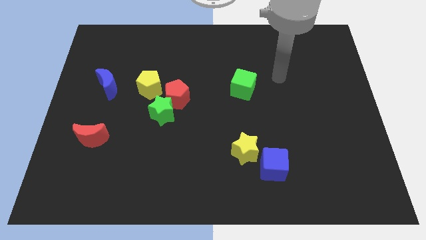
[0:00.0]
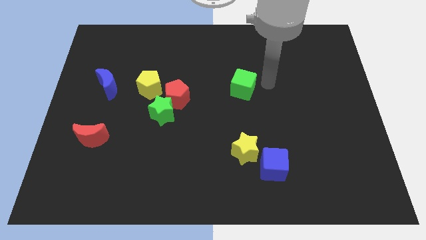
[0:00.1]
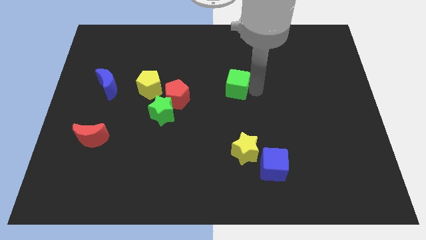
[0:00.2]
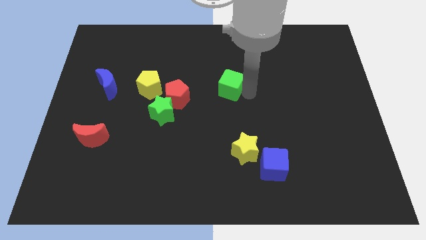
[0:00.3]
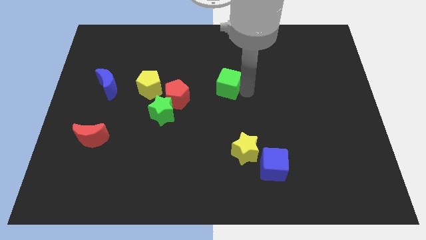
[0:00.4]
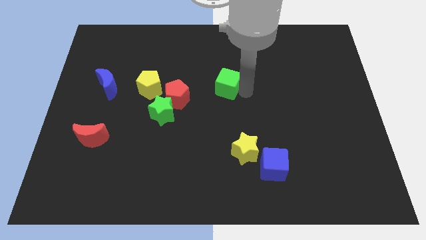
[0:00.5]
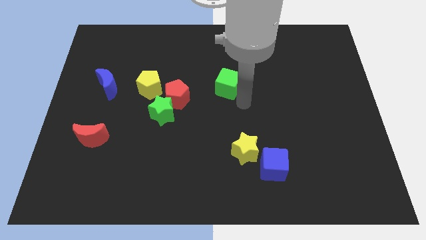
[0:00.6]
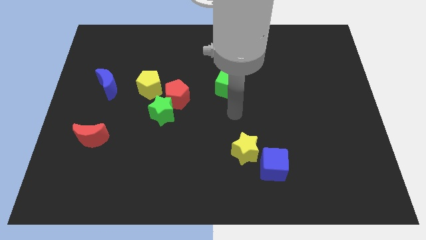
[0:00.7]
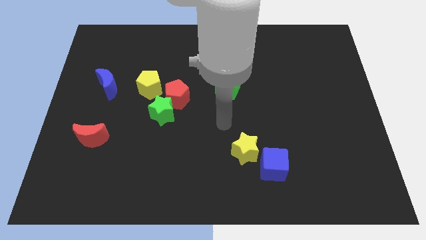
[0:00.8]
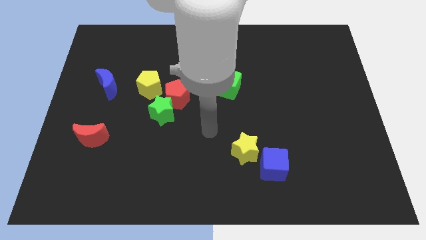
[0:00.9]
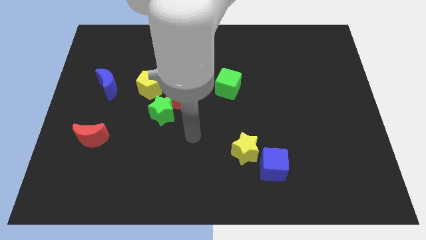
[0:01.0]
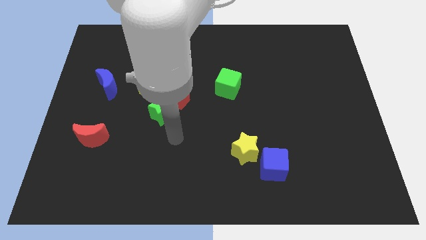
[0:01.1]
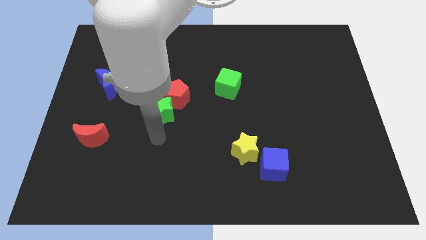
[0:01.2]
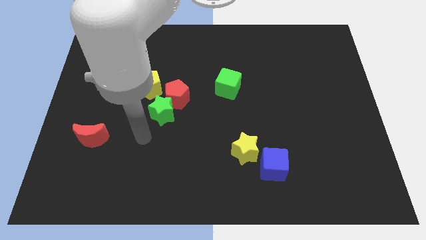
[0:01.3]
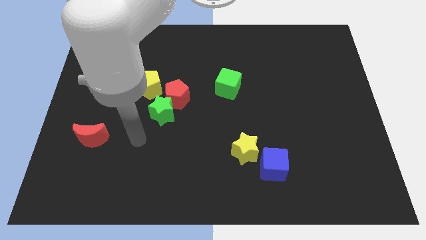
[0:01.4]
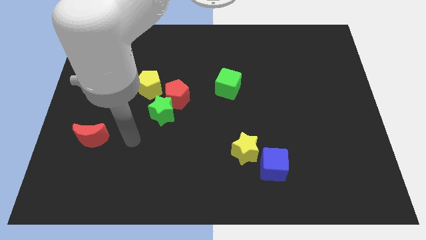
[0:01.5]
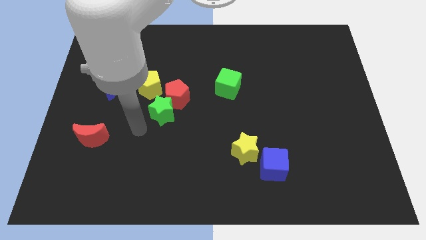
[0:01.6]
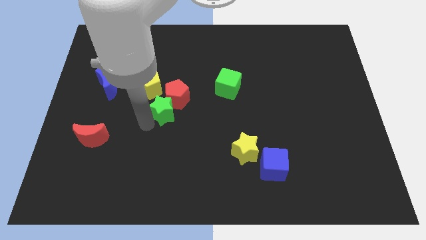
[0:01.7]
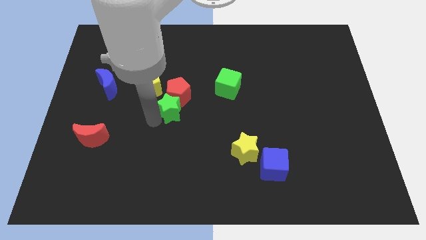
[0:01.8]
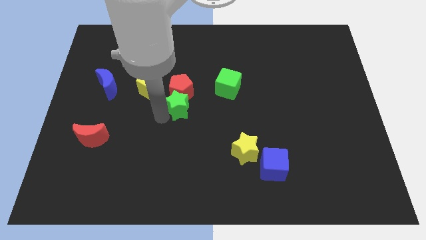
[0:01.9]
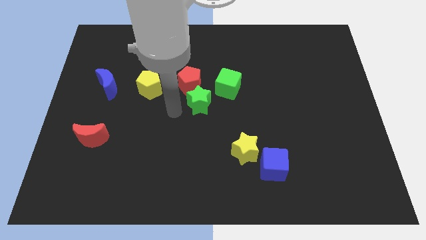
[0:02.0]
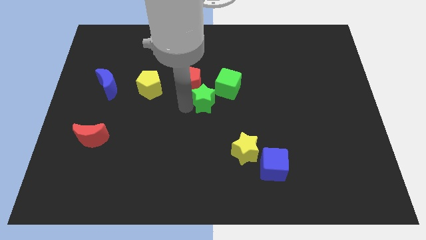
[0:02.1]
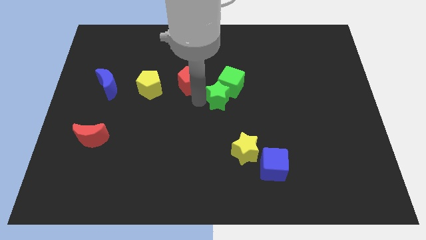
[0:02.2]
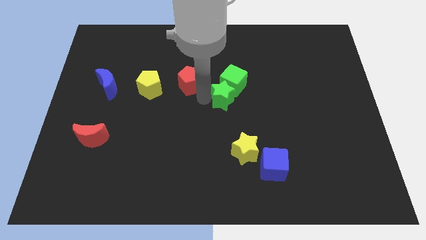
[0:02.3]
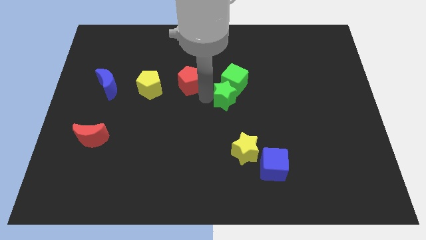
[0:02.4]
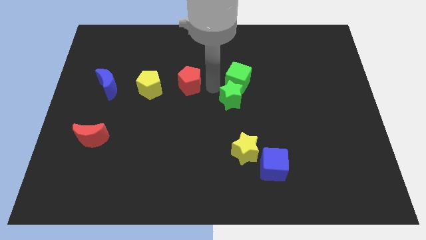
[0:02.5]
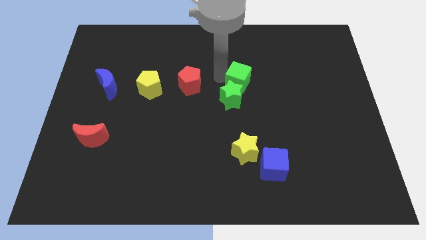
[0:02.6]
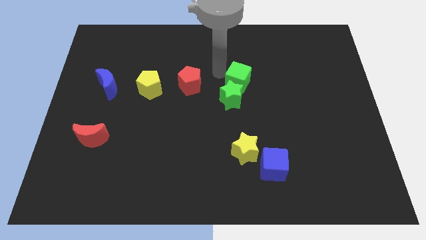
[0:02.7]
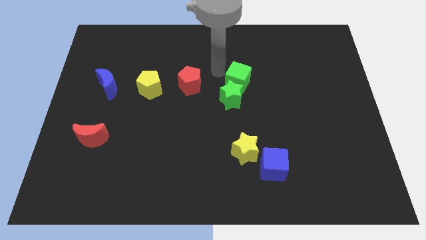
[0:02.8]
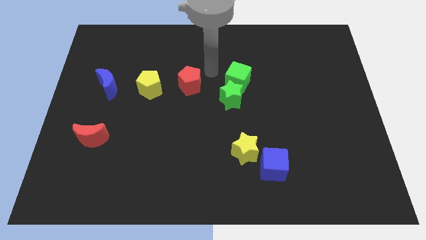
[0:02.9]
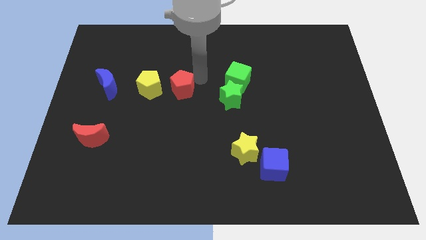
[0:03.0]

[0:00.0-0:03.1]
move the green star below into green cube

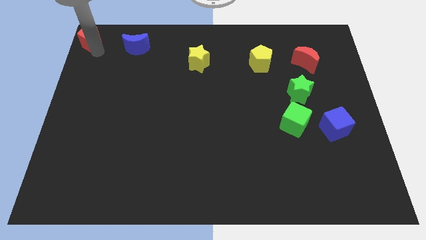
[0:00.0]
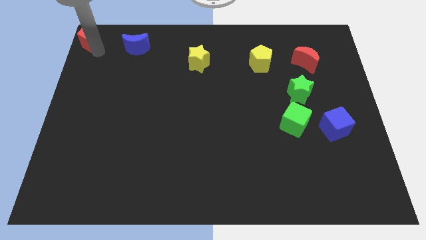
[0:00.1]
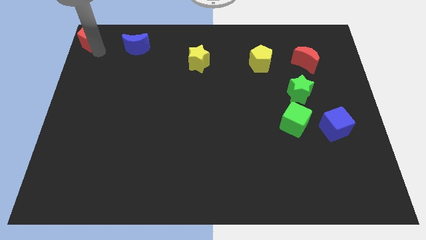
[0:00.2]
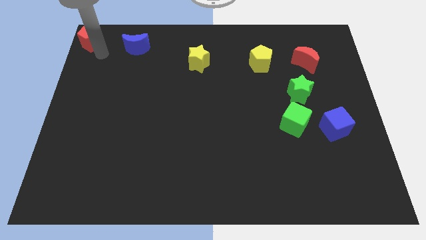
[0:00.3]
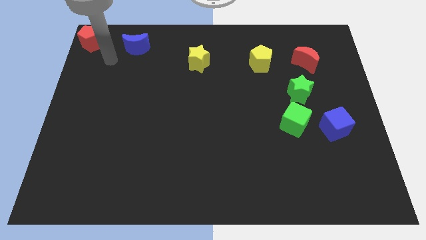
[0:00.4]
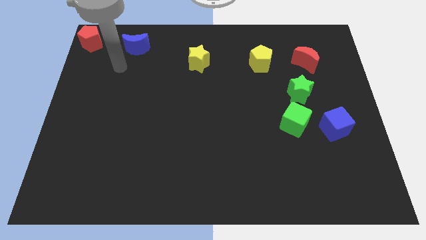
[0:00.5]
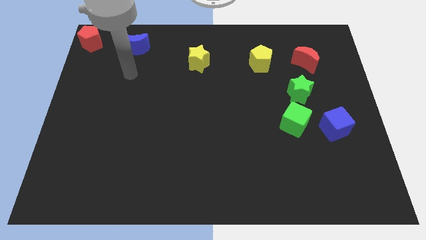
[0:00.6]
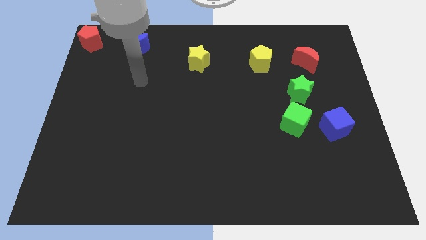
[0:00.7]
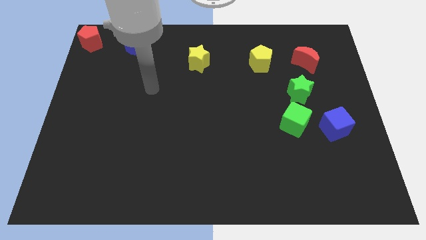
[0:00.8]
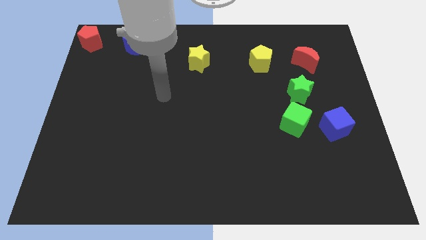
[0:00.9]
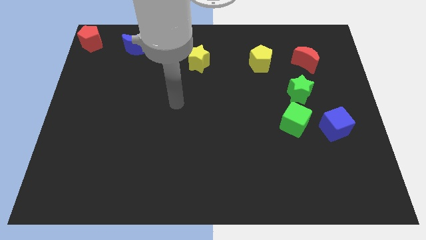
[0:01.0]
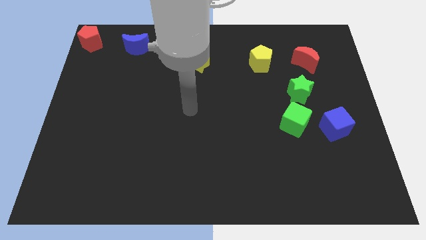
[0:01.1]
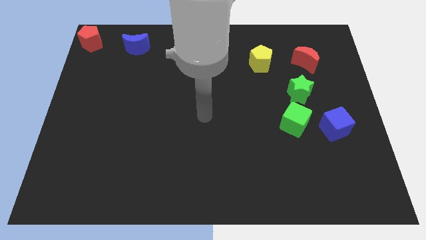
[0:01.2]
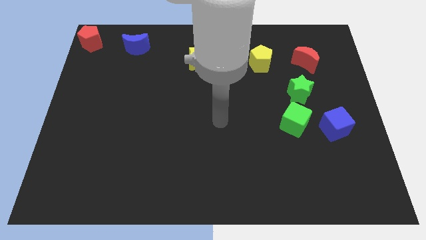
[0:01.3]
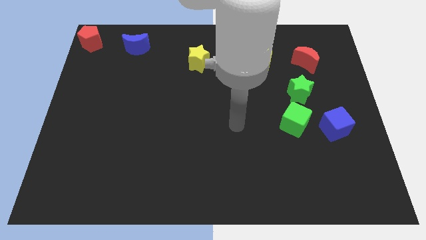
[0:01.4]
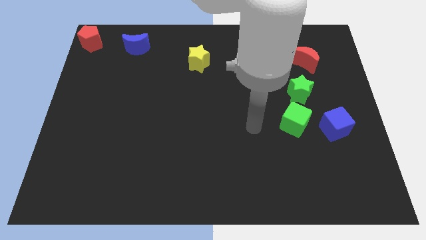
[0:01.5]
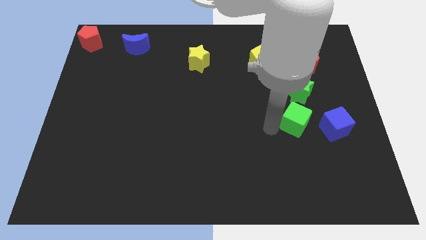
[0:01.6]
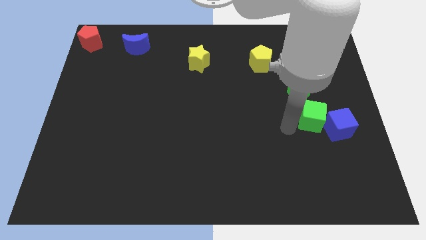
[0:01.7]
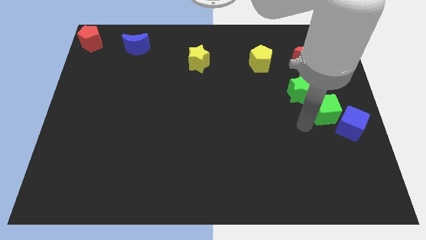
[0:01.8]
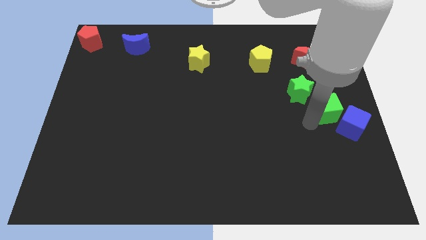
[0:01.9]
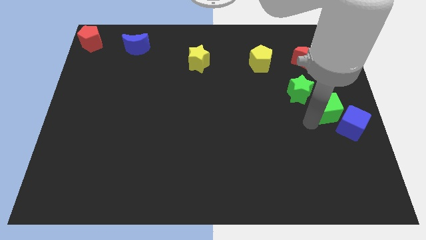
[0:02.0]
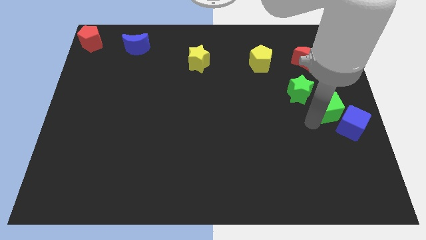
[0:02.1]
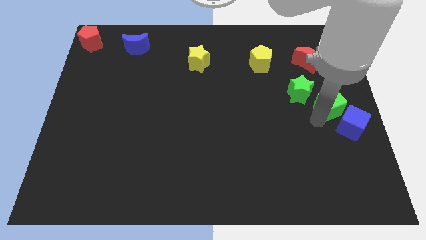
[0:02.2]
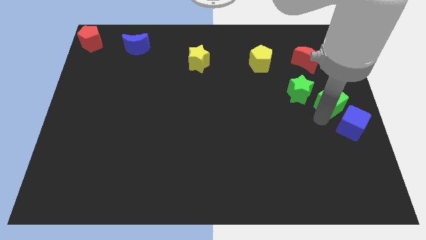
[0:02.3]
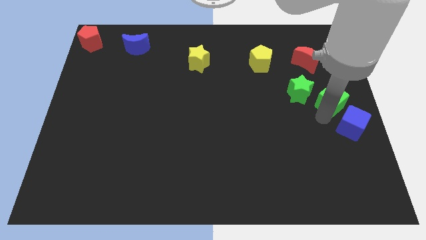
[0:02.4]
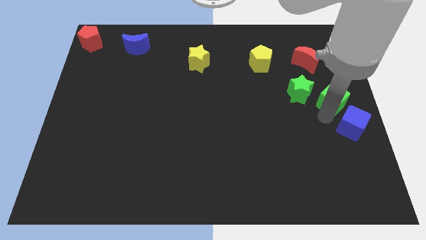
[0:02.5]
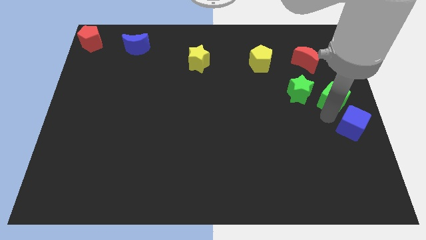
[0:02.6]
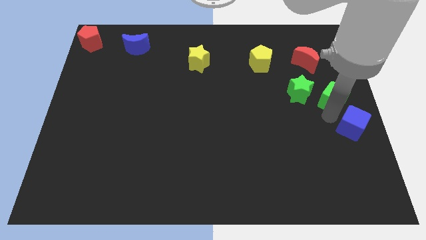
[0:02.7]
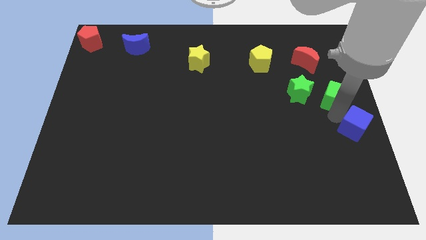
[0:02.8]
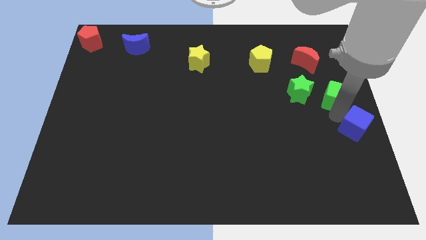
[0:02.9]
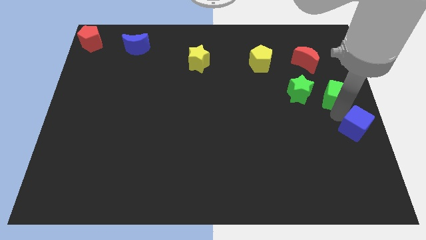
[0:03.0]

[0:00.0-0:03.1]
slide green cube to right of green star

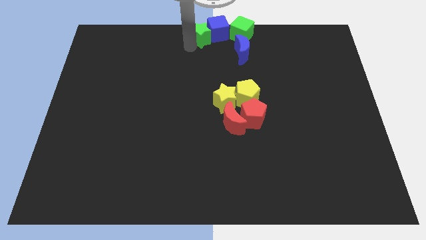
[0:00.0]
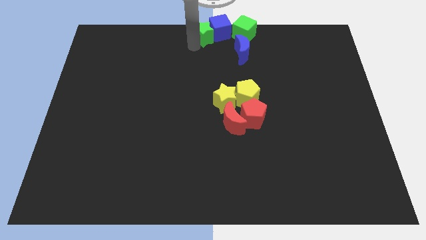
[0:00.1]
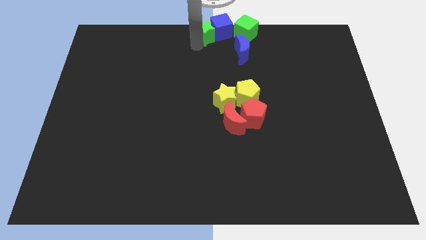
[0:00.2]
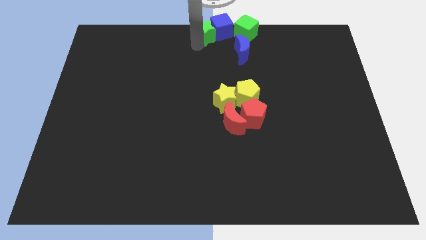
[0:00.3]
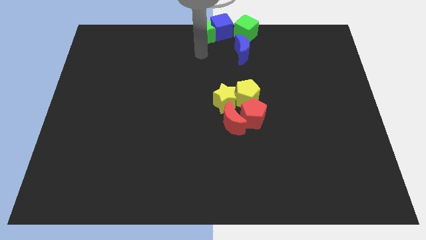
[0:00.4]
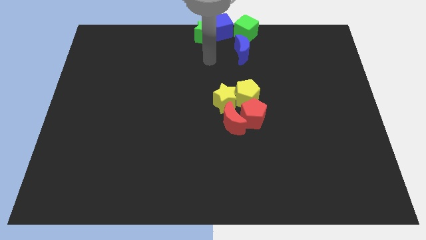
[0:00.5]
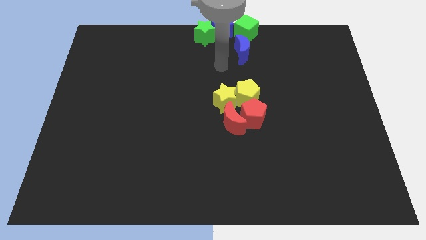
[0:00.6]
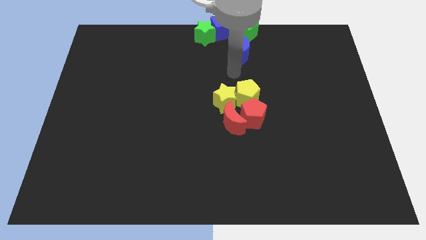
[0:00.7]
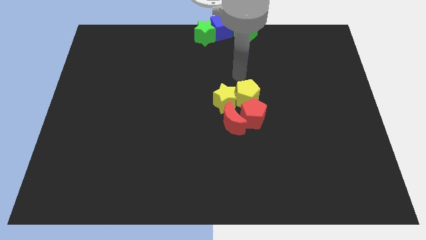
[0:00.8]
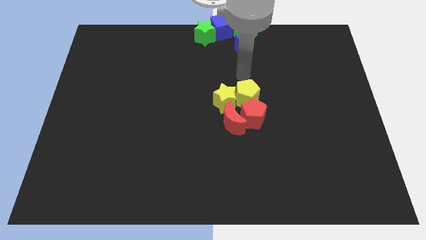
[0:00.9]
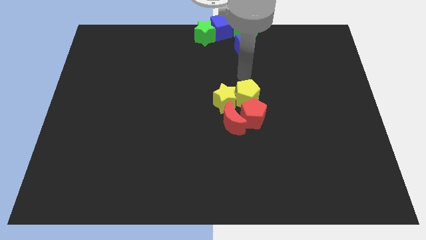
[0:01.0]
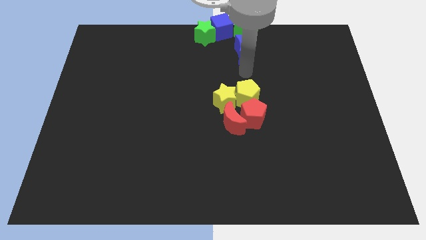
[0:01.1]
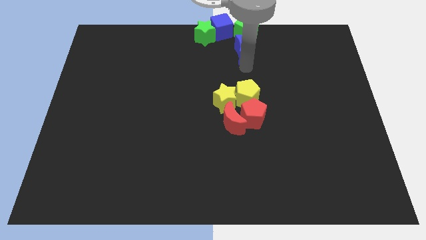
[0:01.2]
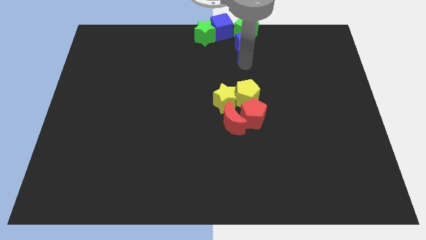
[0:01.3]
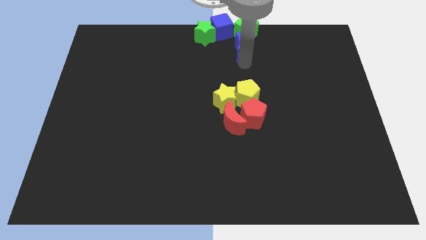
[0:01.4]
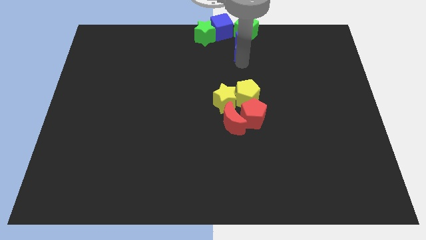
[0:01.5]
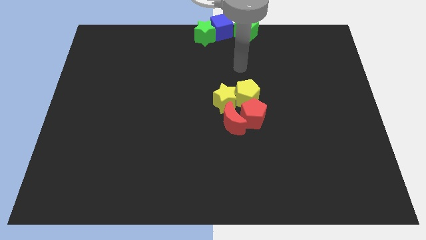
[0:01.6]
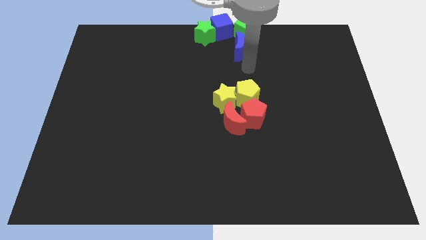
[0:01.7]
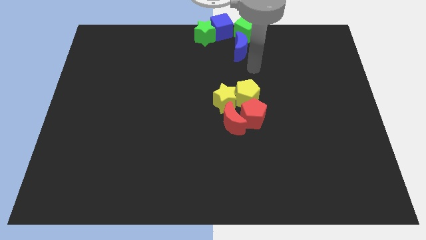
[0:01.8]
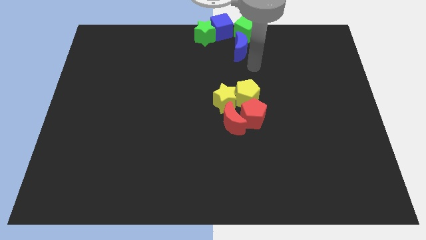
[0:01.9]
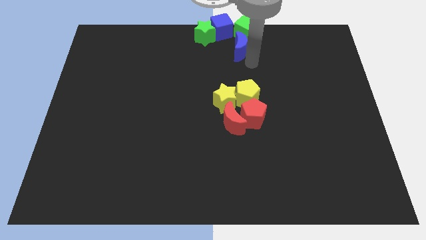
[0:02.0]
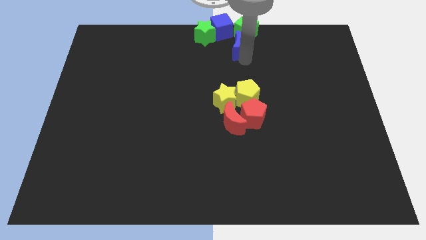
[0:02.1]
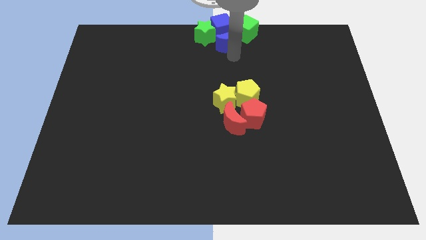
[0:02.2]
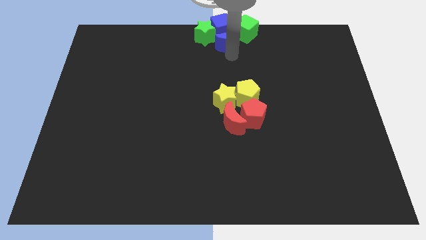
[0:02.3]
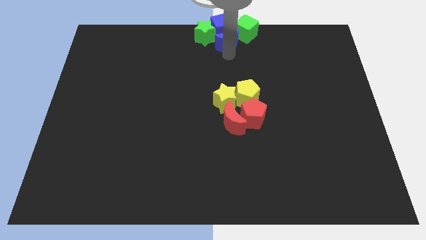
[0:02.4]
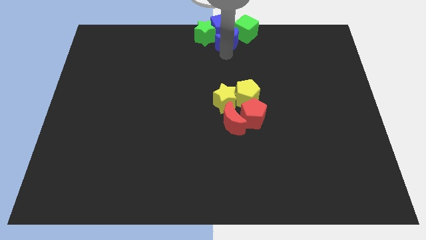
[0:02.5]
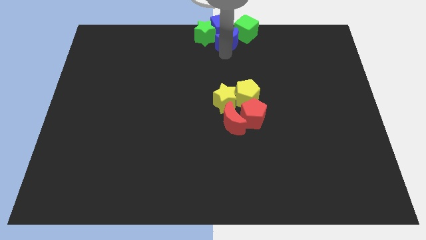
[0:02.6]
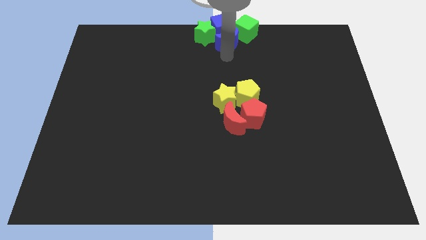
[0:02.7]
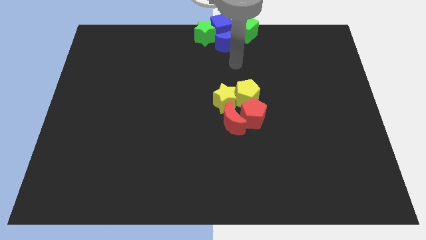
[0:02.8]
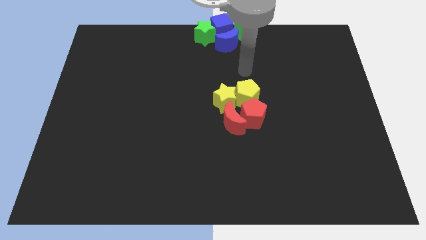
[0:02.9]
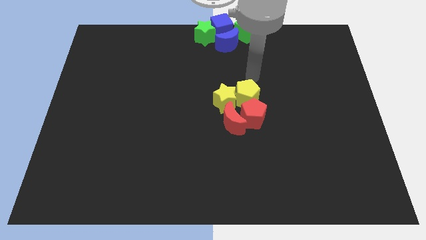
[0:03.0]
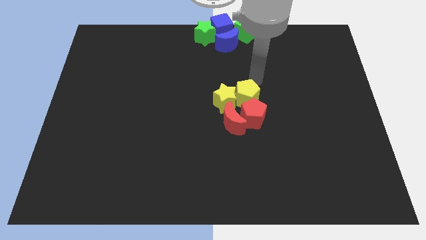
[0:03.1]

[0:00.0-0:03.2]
place the blue crescent at the bottom side of the blue cube
